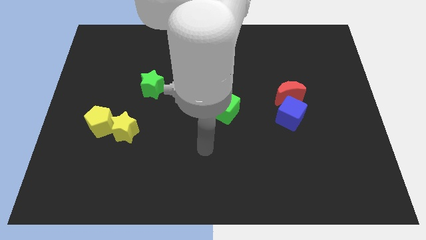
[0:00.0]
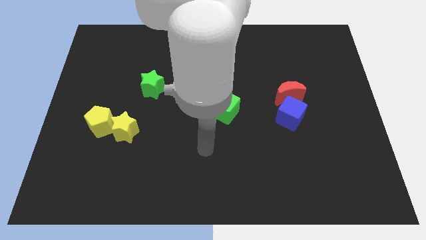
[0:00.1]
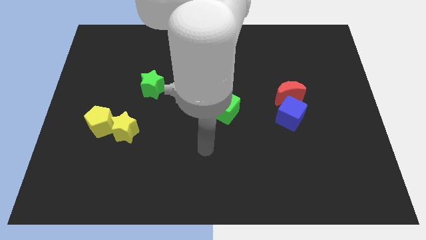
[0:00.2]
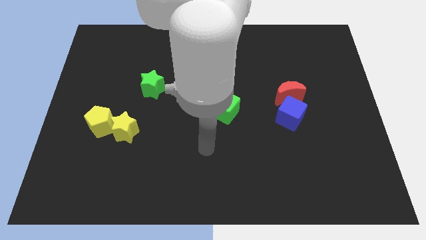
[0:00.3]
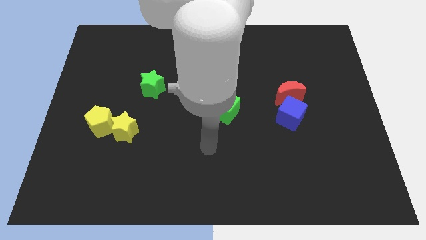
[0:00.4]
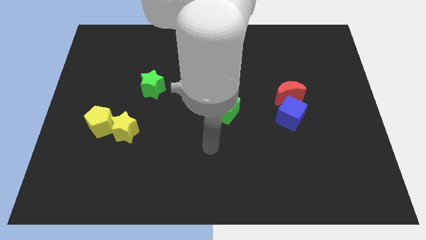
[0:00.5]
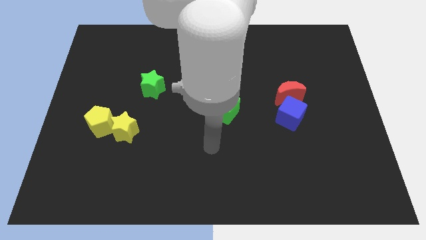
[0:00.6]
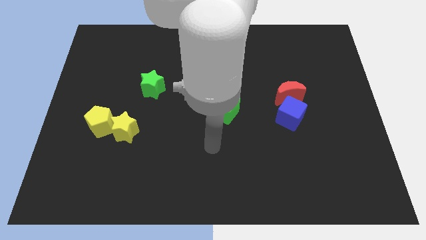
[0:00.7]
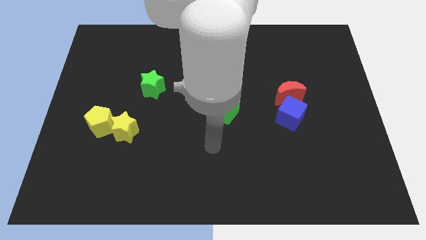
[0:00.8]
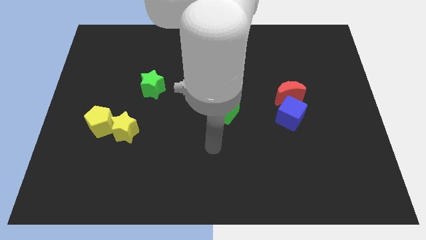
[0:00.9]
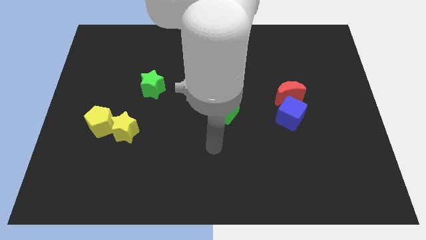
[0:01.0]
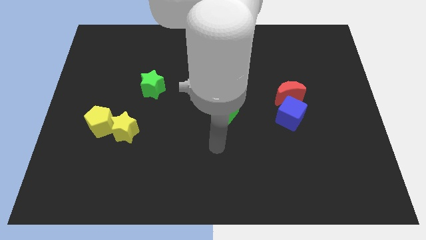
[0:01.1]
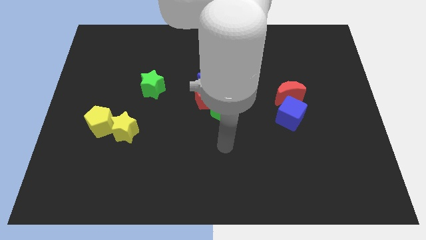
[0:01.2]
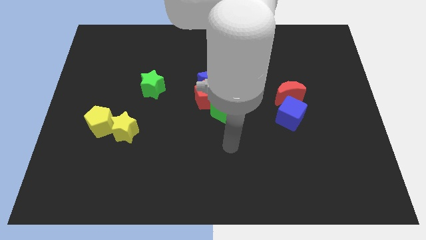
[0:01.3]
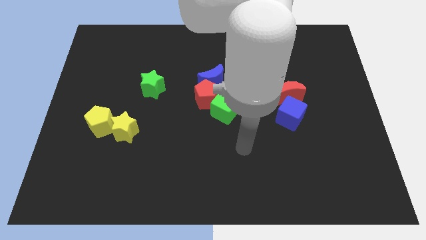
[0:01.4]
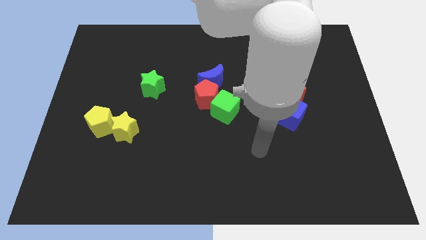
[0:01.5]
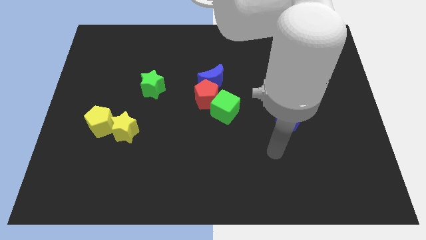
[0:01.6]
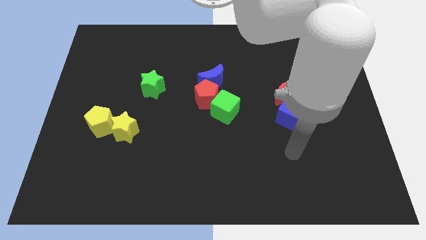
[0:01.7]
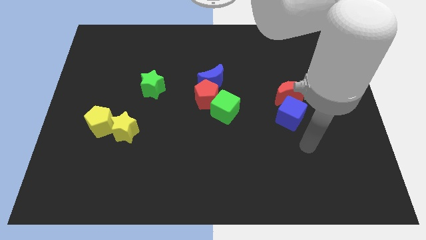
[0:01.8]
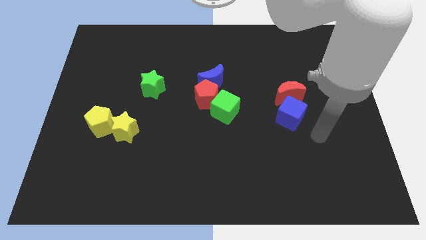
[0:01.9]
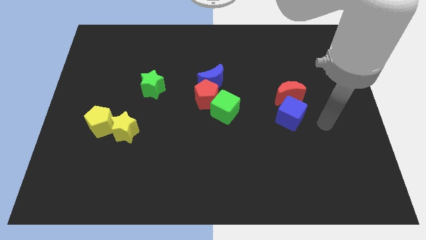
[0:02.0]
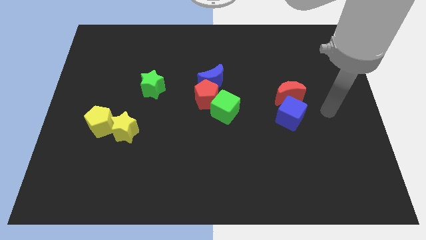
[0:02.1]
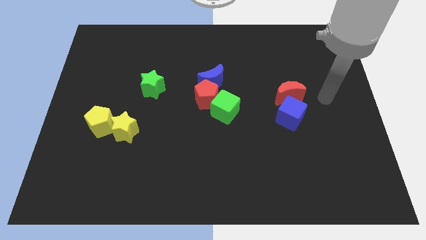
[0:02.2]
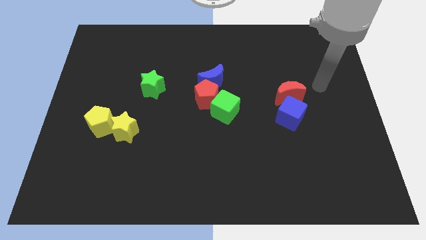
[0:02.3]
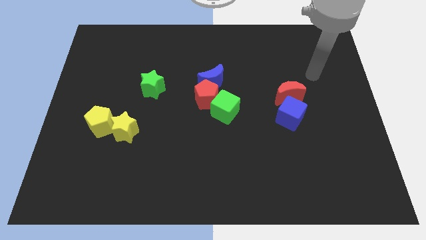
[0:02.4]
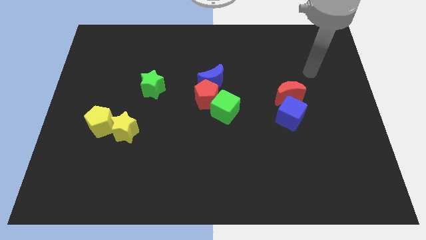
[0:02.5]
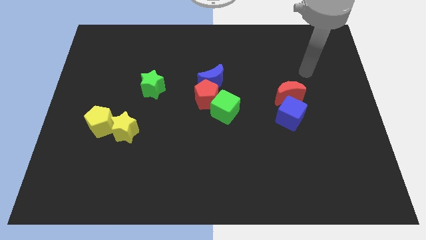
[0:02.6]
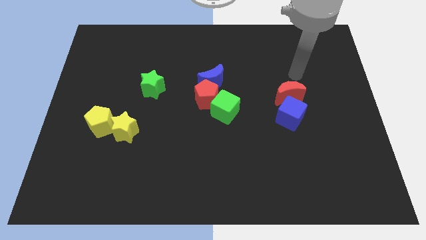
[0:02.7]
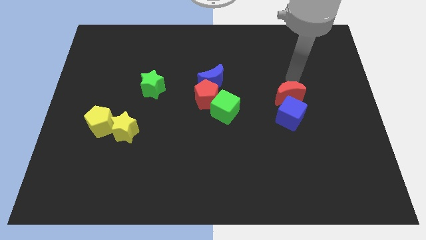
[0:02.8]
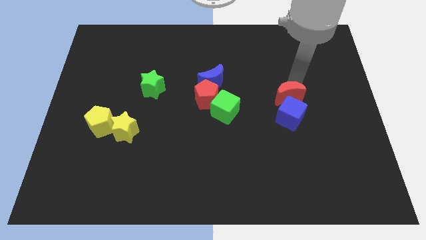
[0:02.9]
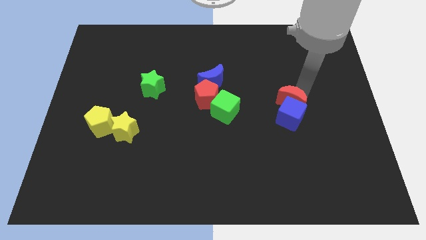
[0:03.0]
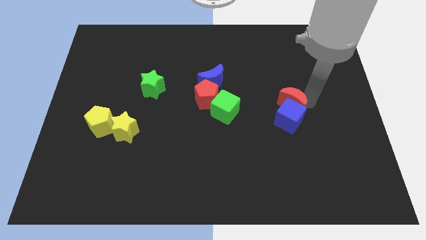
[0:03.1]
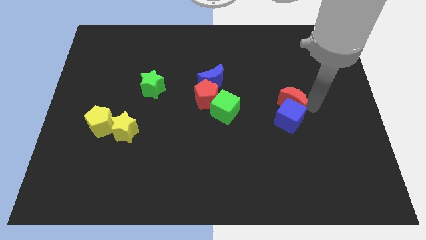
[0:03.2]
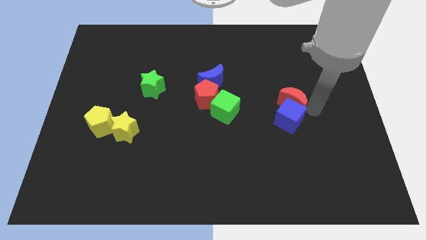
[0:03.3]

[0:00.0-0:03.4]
place your arm to right side of the blue cube

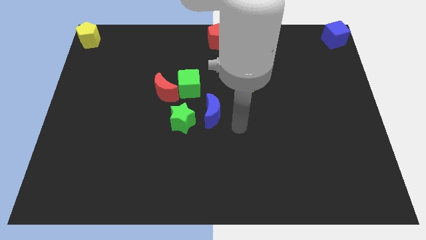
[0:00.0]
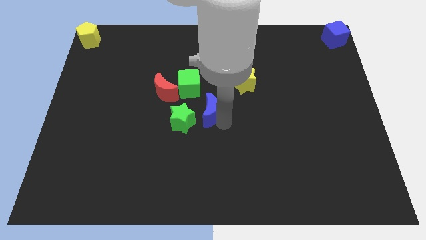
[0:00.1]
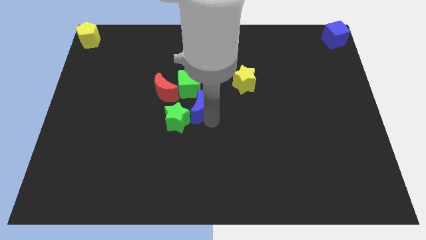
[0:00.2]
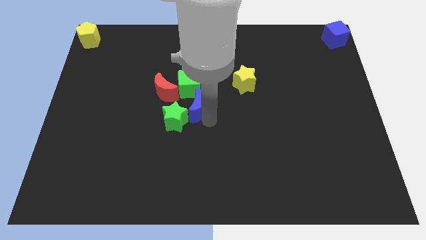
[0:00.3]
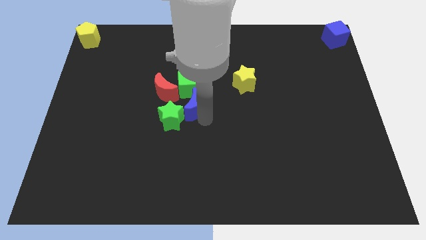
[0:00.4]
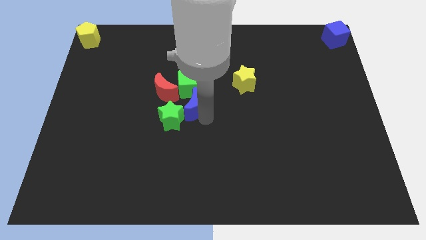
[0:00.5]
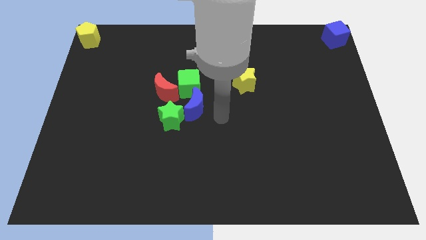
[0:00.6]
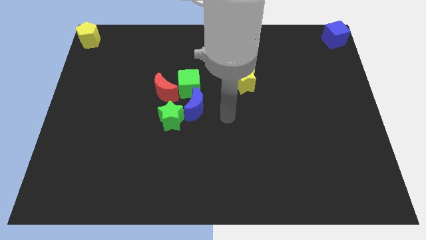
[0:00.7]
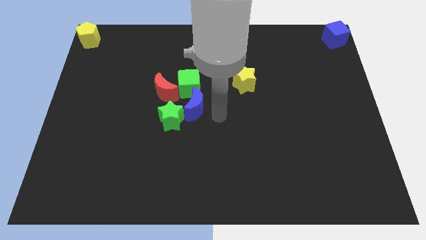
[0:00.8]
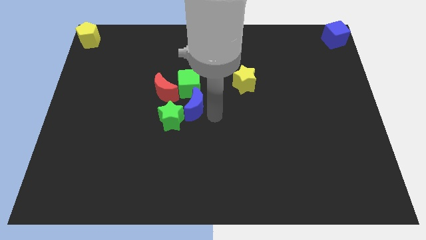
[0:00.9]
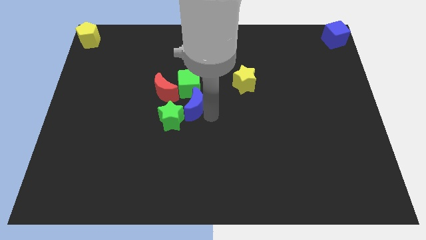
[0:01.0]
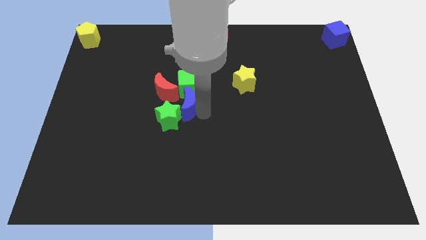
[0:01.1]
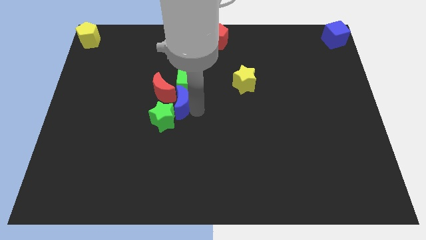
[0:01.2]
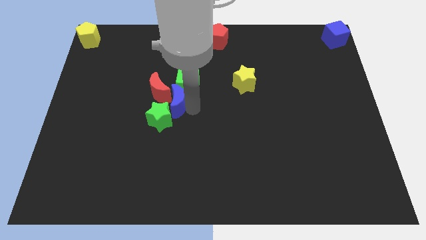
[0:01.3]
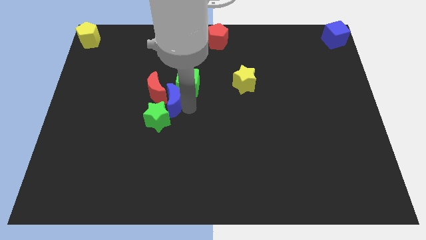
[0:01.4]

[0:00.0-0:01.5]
move the blue crescent between the green star and green cube

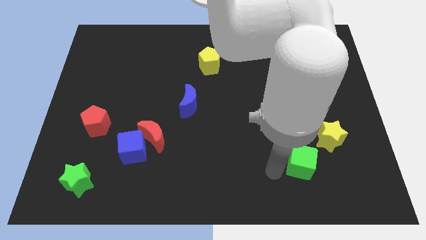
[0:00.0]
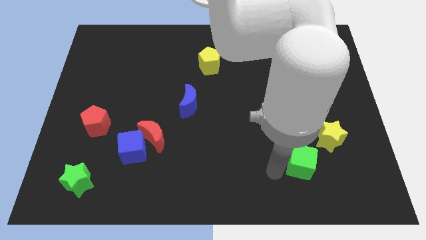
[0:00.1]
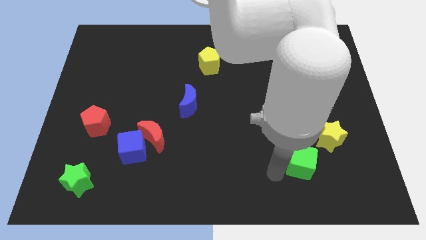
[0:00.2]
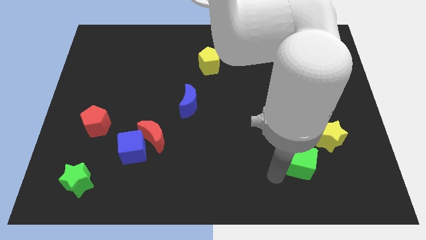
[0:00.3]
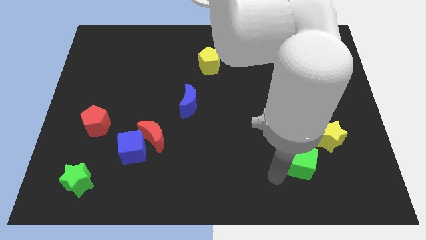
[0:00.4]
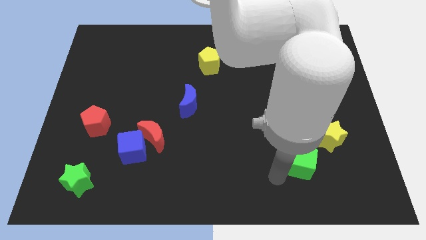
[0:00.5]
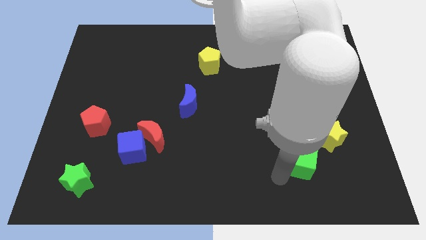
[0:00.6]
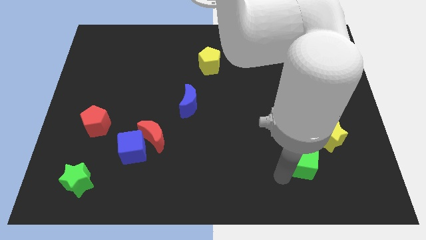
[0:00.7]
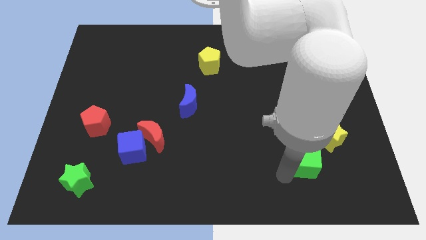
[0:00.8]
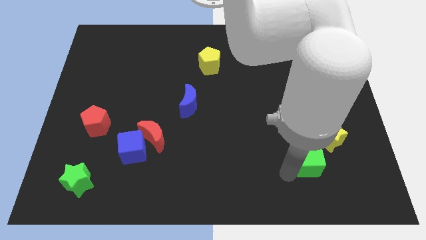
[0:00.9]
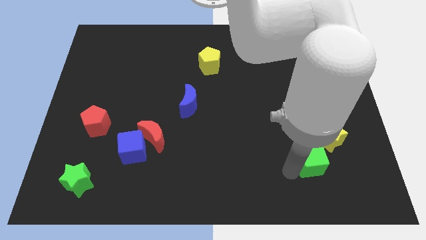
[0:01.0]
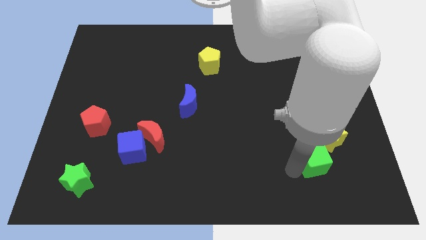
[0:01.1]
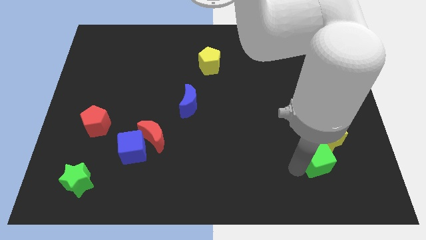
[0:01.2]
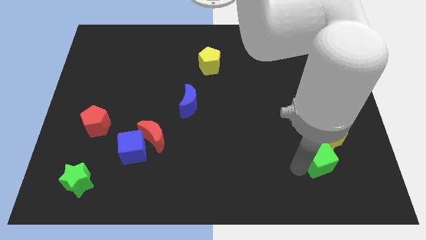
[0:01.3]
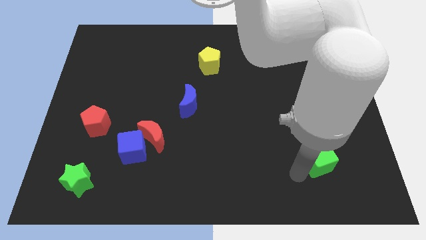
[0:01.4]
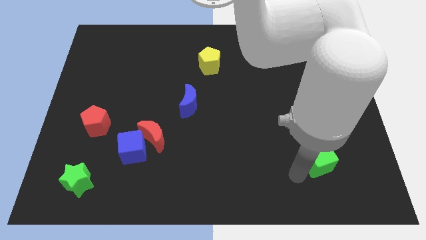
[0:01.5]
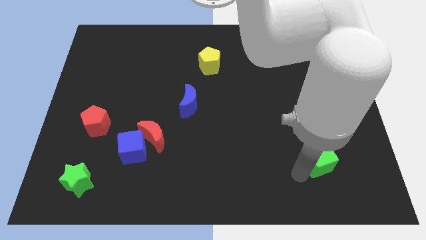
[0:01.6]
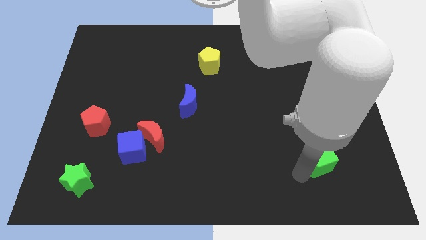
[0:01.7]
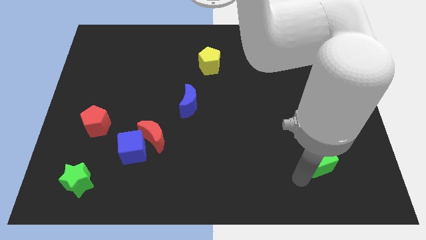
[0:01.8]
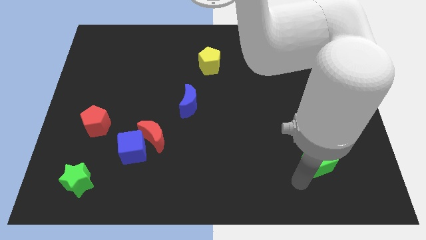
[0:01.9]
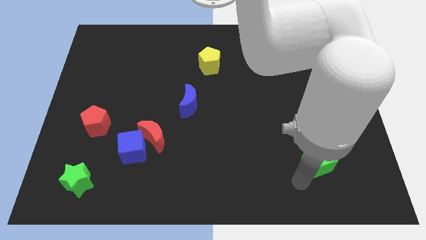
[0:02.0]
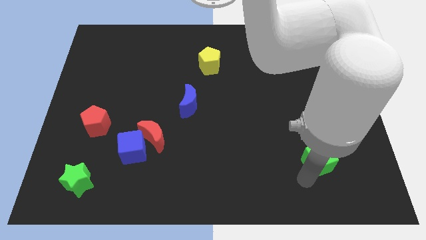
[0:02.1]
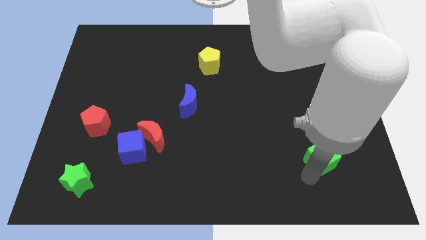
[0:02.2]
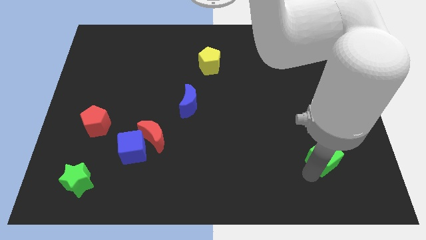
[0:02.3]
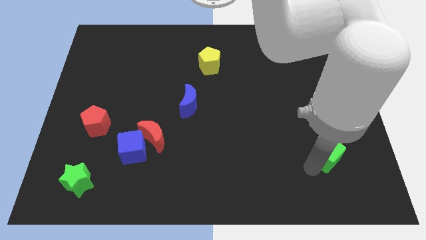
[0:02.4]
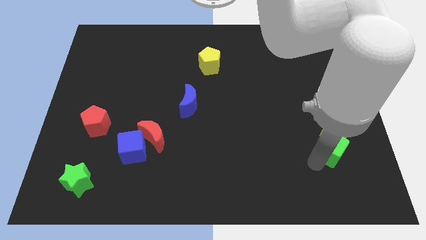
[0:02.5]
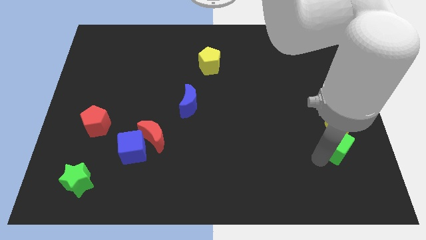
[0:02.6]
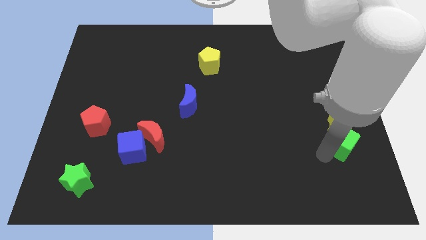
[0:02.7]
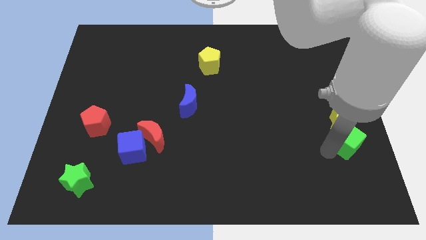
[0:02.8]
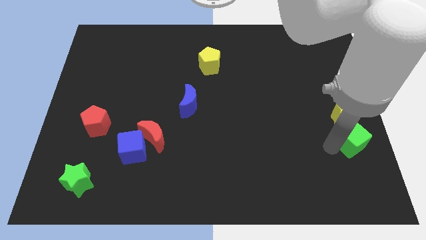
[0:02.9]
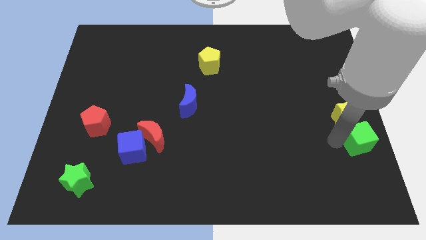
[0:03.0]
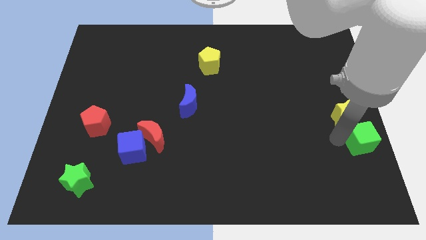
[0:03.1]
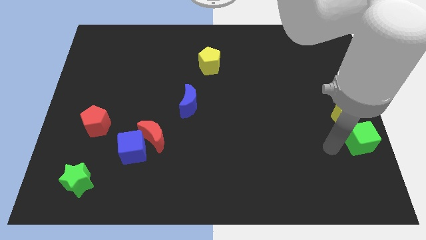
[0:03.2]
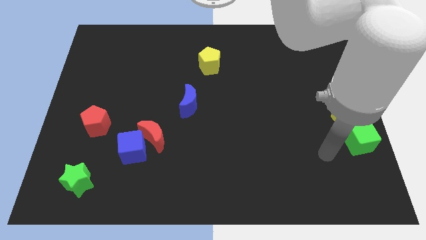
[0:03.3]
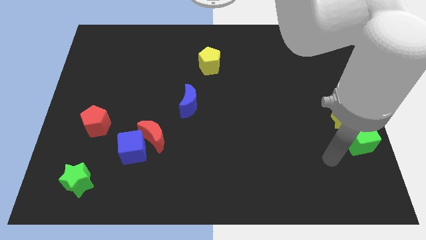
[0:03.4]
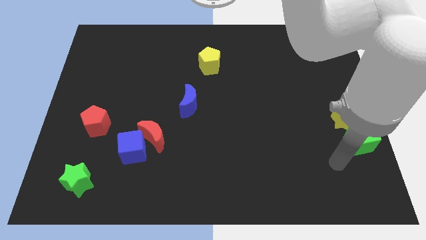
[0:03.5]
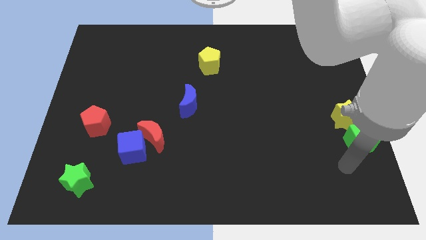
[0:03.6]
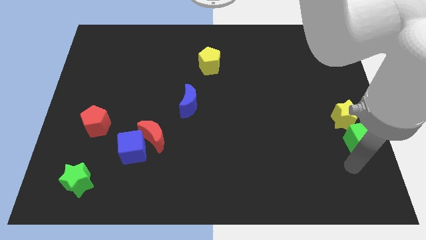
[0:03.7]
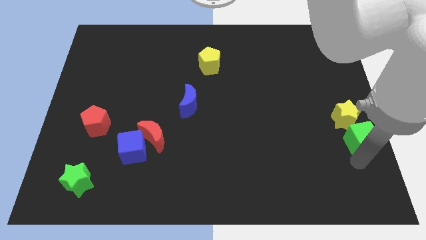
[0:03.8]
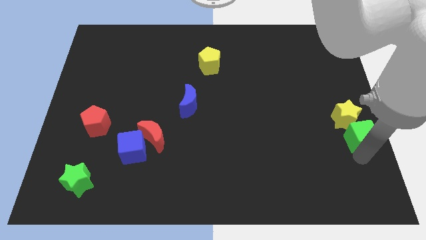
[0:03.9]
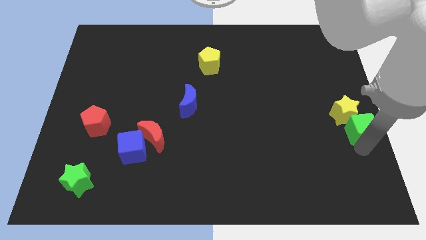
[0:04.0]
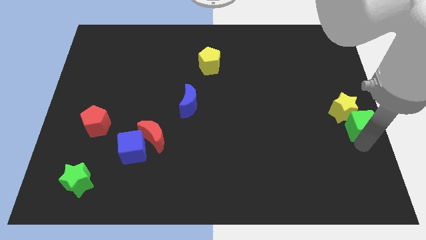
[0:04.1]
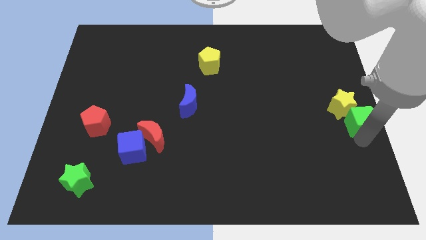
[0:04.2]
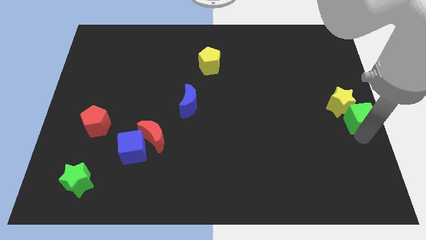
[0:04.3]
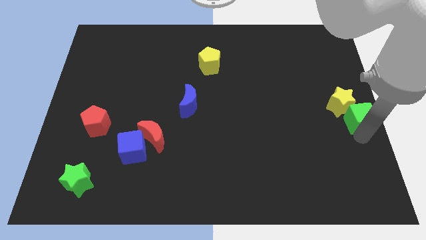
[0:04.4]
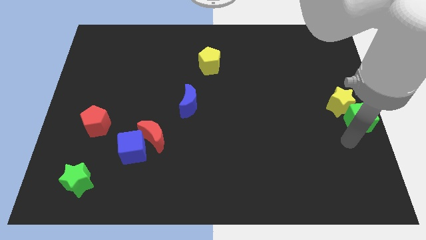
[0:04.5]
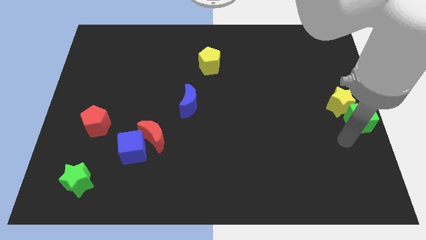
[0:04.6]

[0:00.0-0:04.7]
move the green cube and yellow star to the center left of the table
